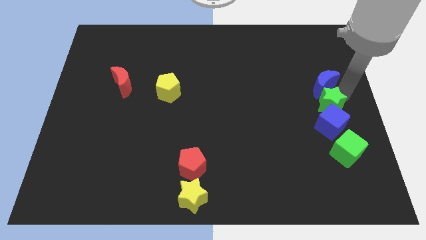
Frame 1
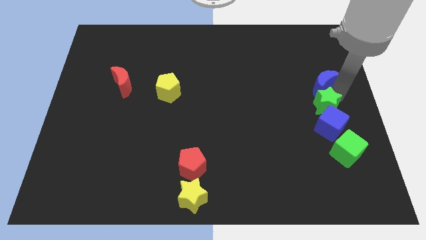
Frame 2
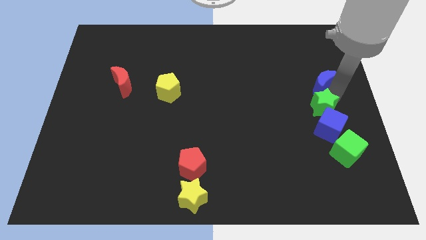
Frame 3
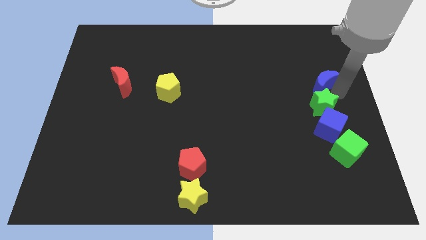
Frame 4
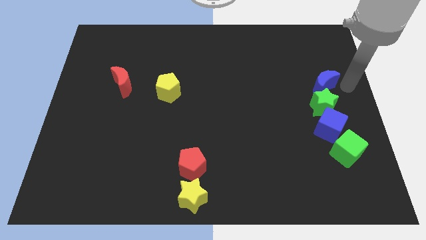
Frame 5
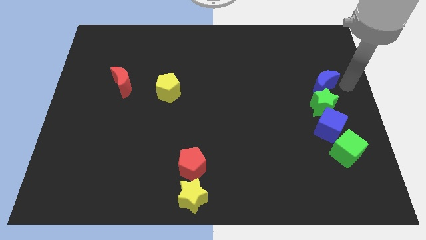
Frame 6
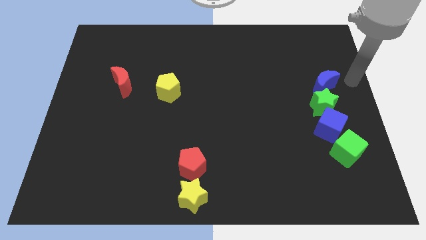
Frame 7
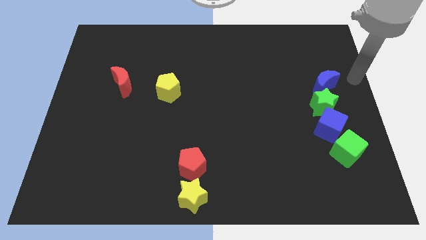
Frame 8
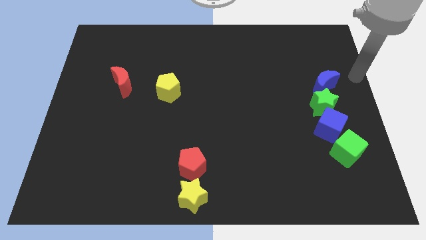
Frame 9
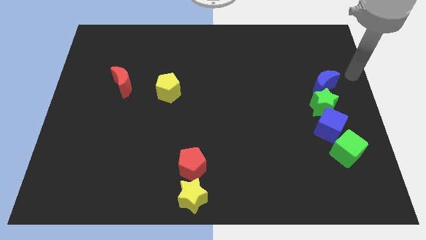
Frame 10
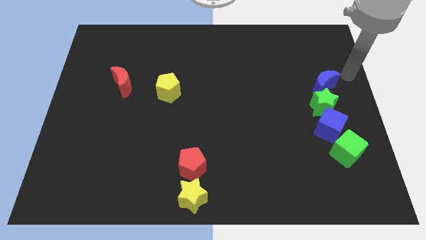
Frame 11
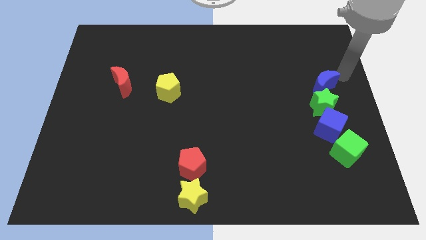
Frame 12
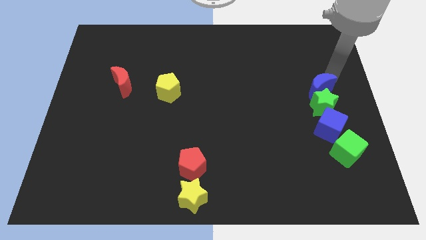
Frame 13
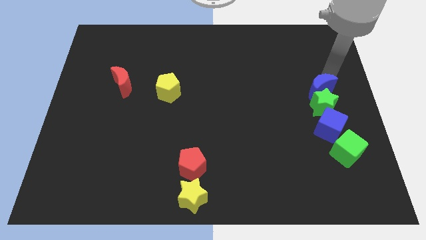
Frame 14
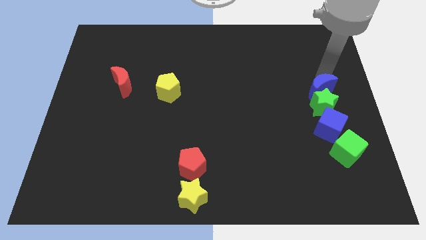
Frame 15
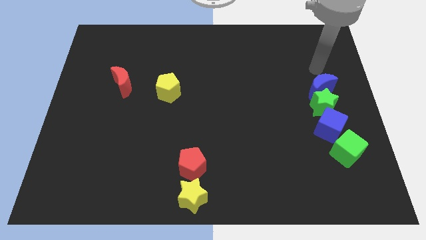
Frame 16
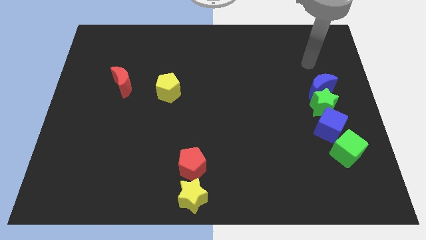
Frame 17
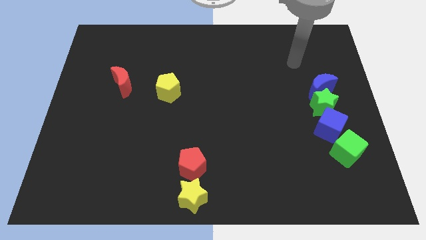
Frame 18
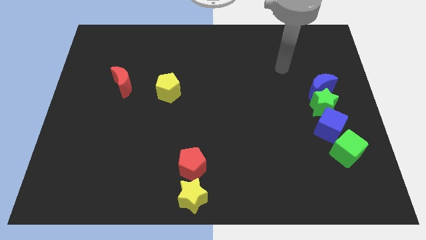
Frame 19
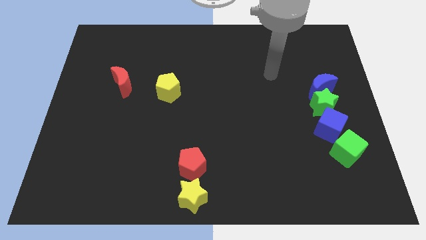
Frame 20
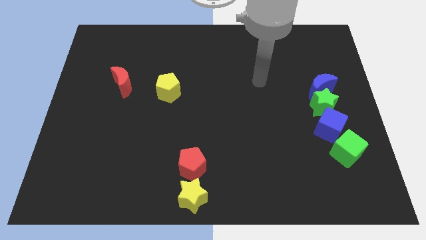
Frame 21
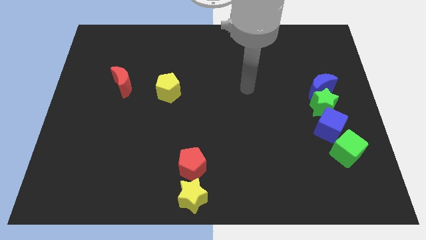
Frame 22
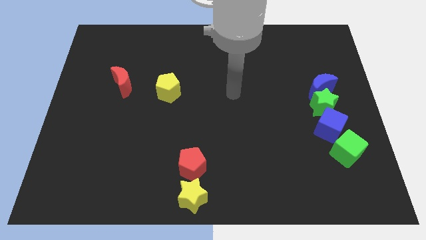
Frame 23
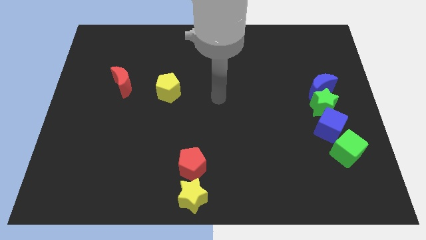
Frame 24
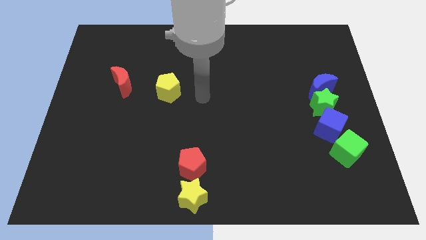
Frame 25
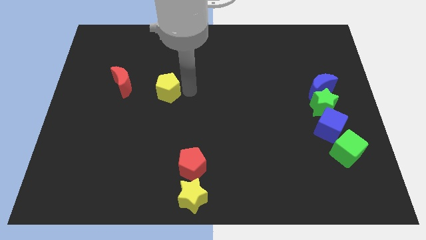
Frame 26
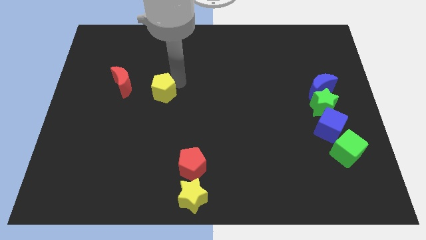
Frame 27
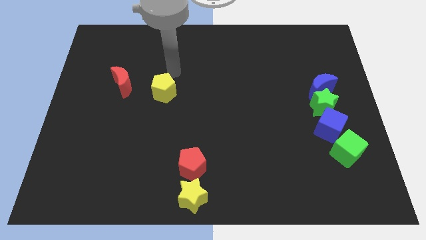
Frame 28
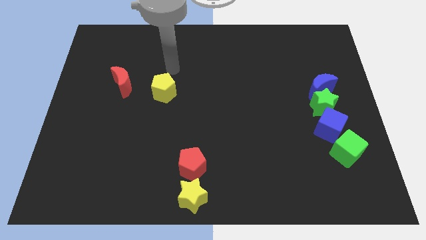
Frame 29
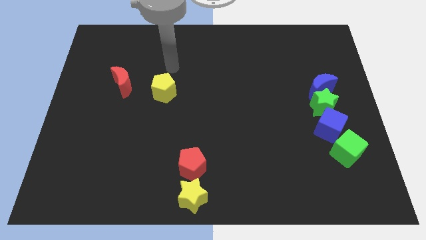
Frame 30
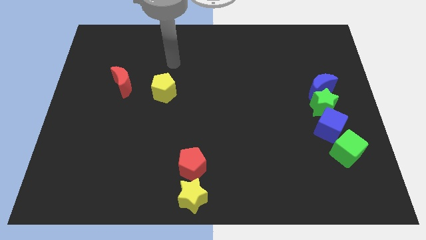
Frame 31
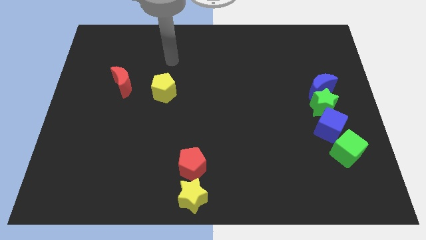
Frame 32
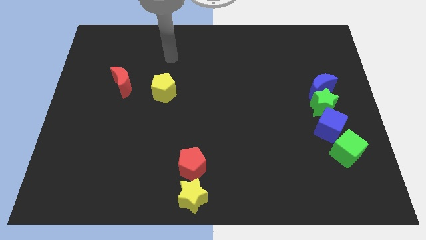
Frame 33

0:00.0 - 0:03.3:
move your arm to the top of the yellow pentagon

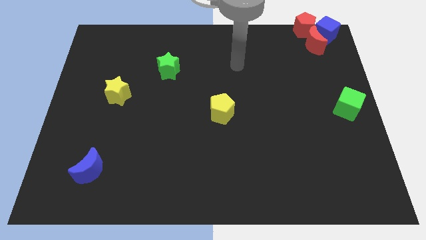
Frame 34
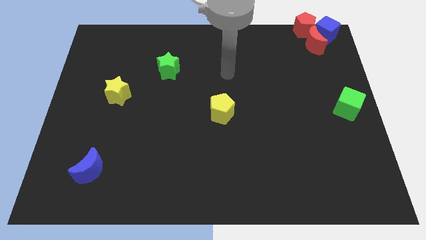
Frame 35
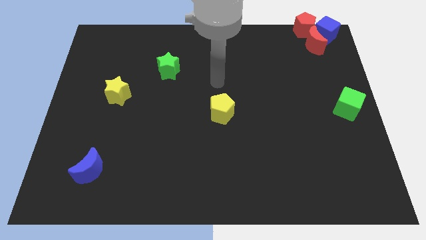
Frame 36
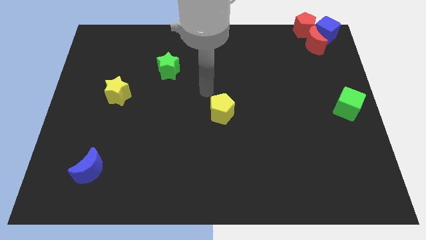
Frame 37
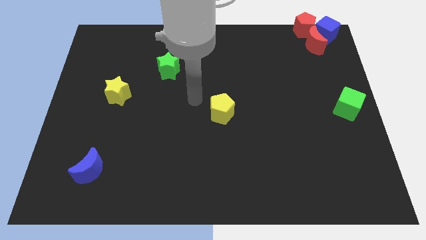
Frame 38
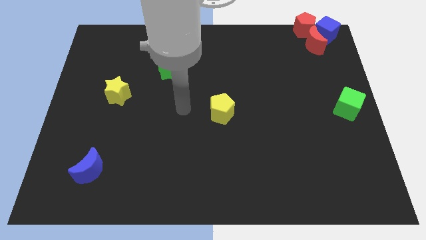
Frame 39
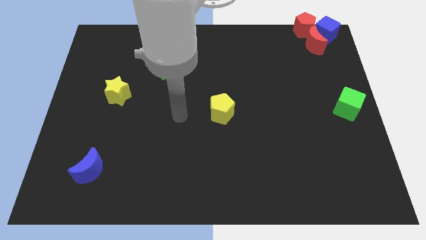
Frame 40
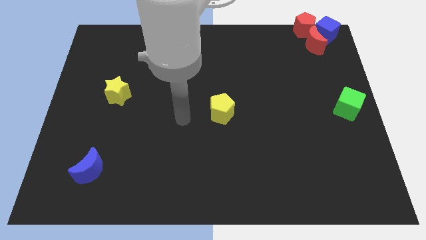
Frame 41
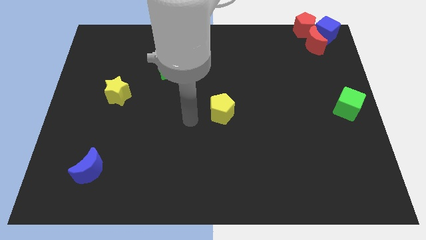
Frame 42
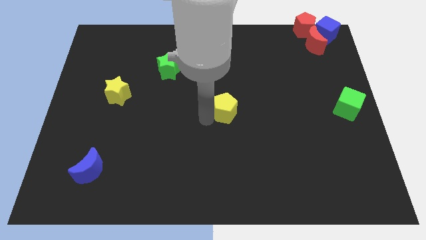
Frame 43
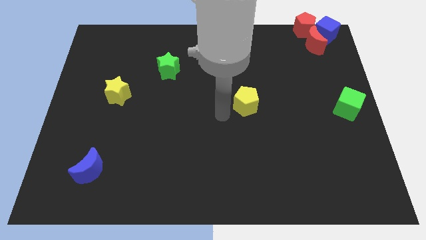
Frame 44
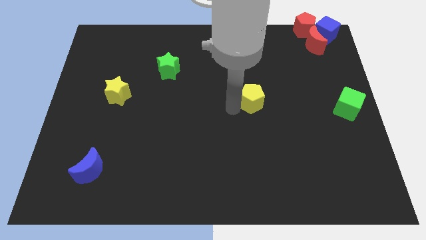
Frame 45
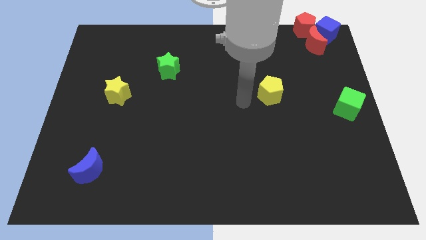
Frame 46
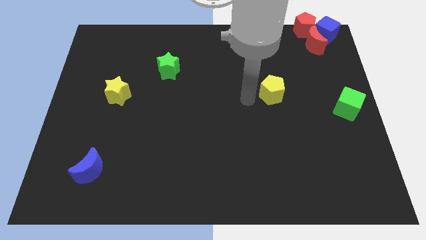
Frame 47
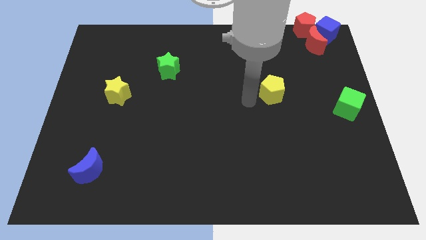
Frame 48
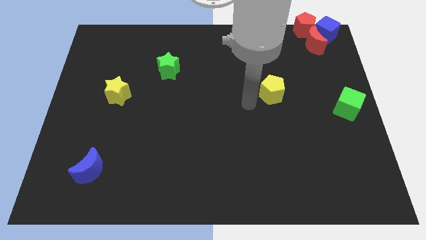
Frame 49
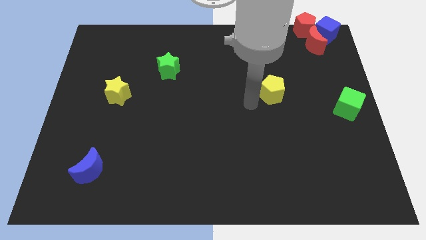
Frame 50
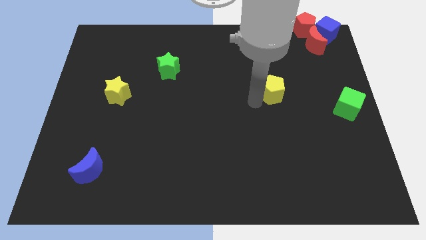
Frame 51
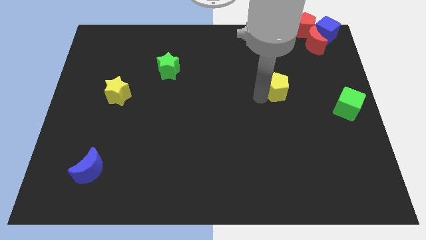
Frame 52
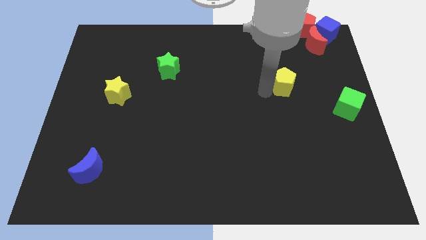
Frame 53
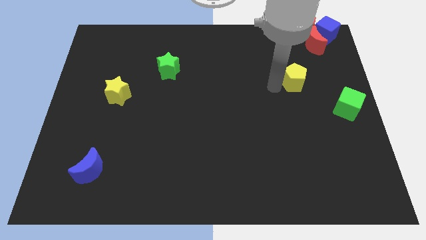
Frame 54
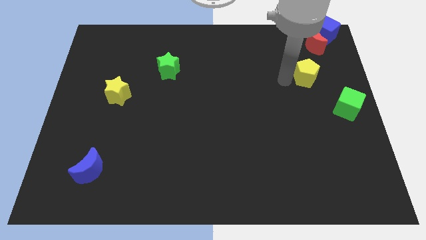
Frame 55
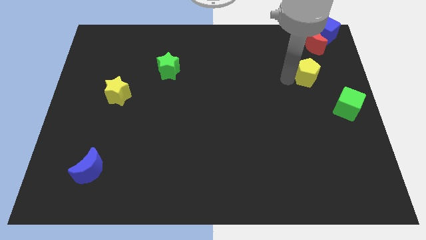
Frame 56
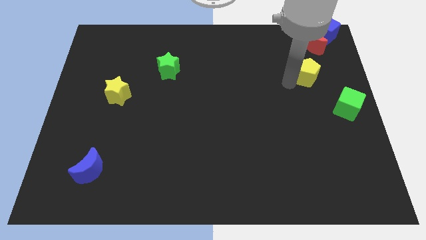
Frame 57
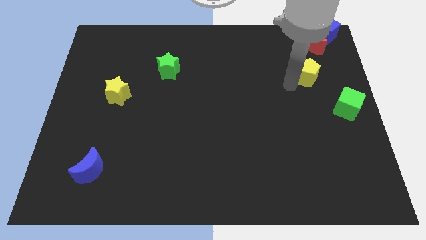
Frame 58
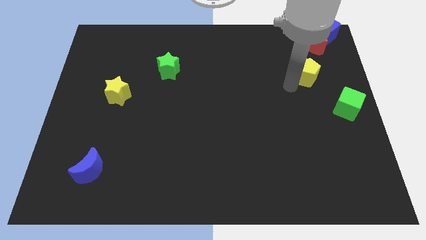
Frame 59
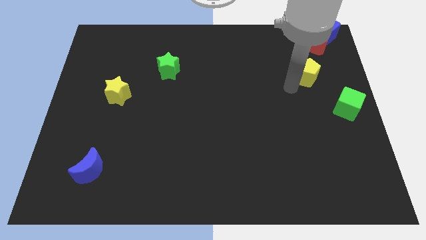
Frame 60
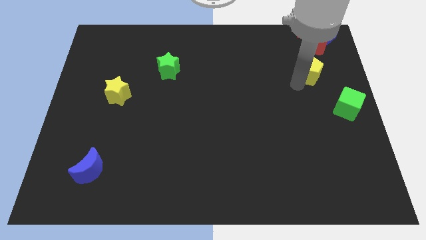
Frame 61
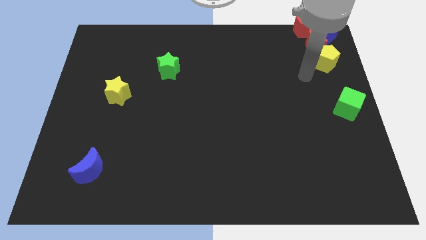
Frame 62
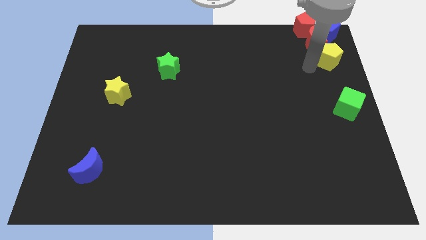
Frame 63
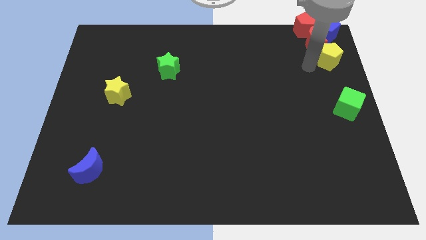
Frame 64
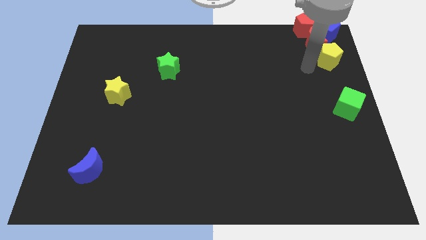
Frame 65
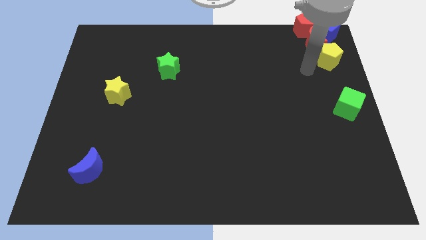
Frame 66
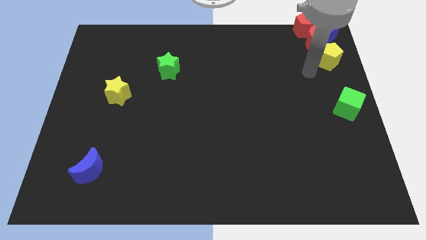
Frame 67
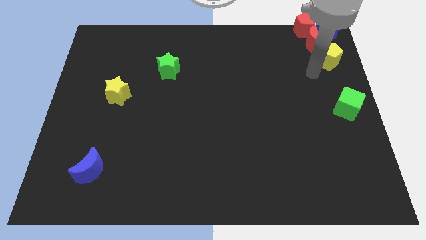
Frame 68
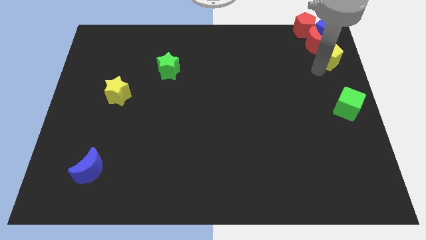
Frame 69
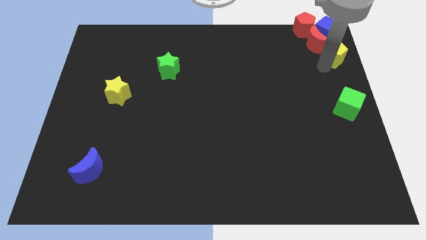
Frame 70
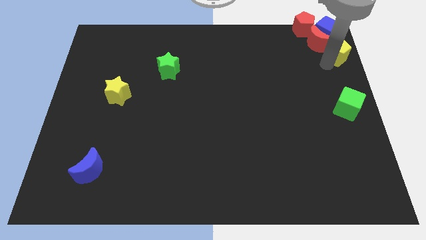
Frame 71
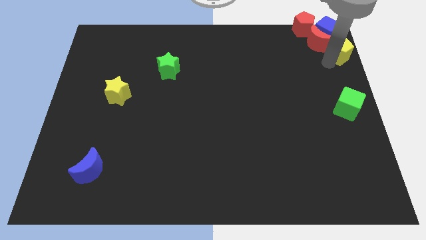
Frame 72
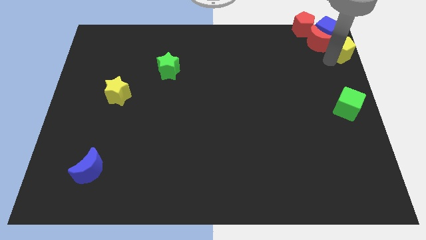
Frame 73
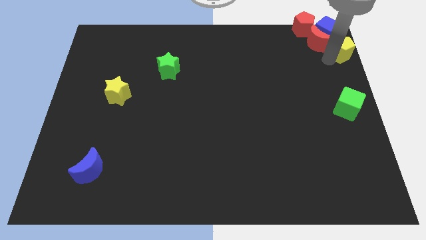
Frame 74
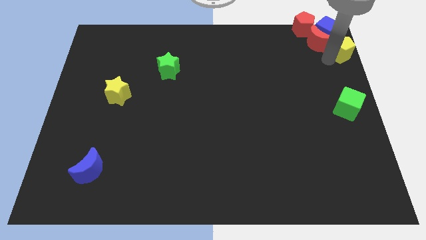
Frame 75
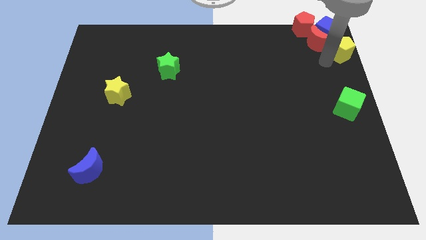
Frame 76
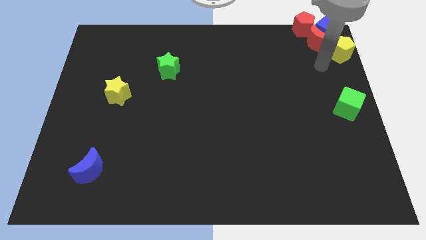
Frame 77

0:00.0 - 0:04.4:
place the yellow pentagon above the green cube

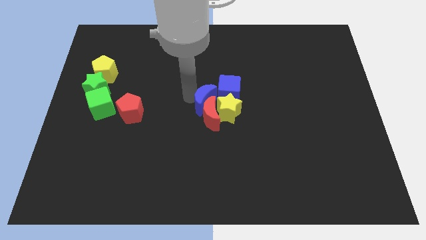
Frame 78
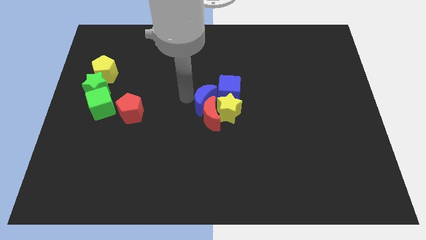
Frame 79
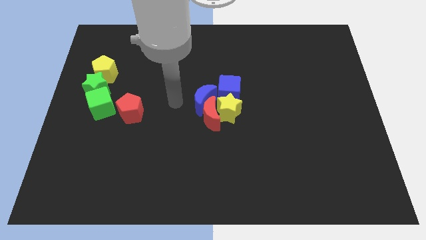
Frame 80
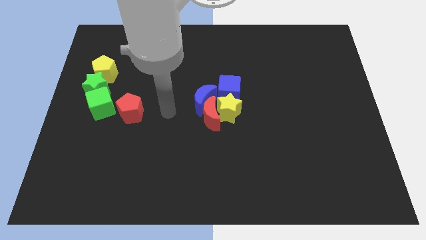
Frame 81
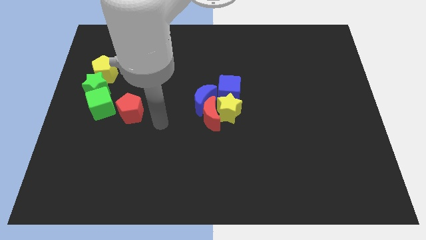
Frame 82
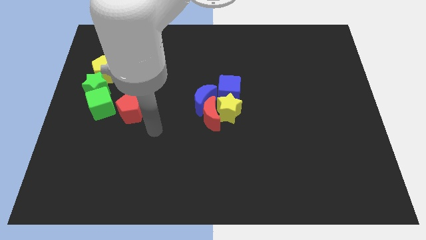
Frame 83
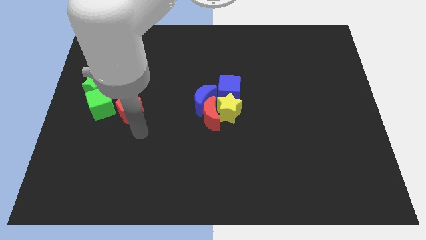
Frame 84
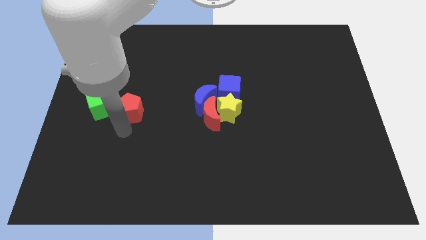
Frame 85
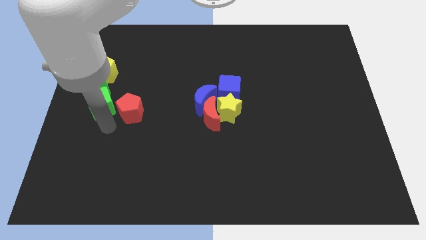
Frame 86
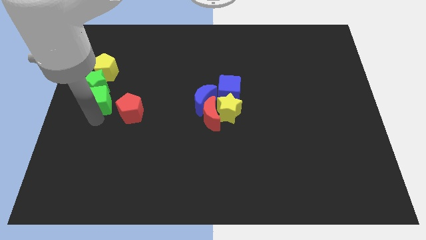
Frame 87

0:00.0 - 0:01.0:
place your arm to the bottom of the green cube

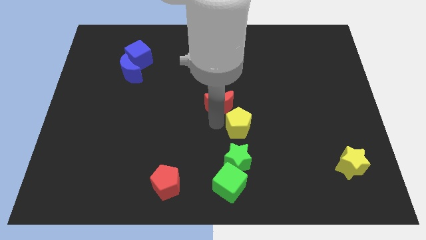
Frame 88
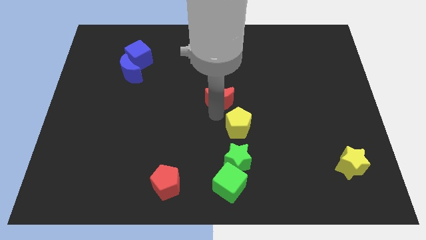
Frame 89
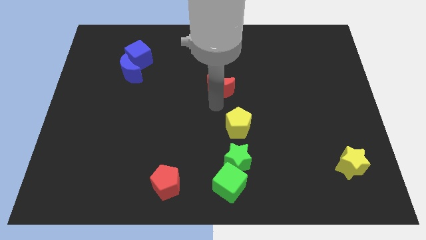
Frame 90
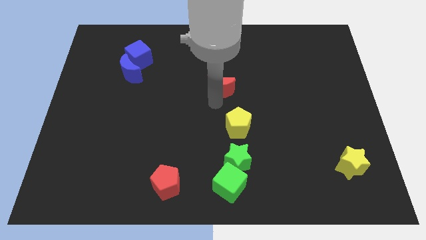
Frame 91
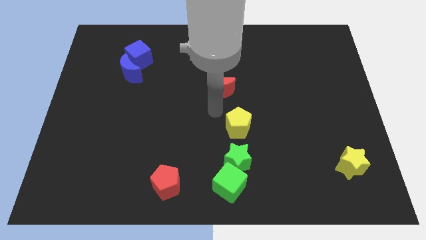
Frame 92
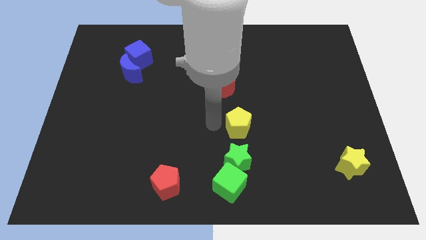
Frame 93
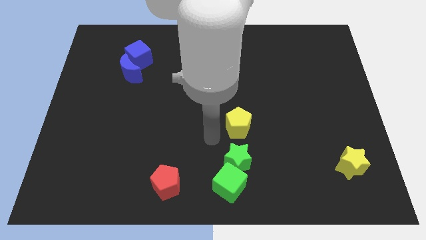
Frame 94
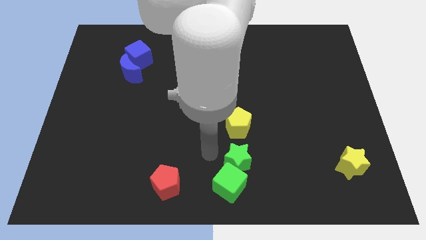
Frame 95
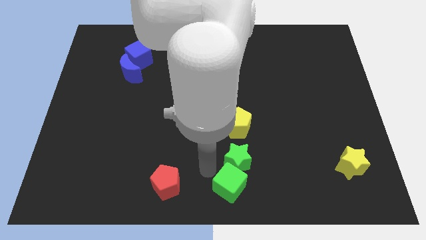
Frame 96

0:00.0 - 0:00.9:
move the arm away from red crescent
